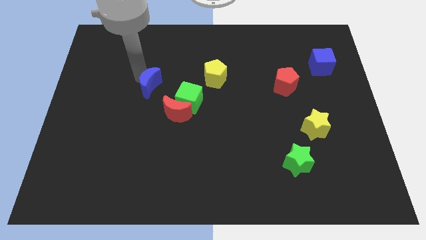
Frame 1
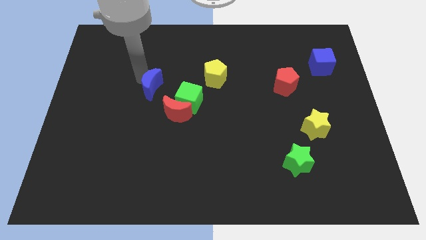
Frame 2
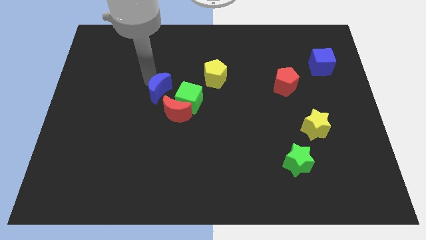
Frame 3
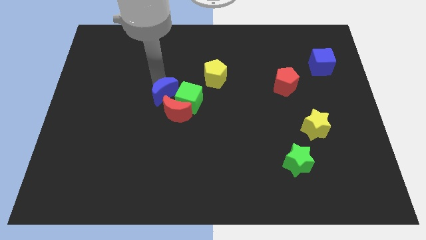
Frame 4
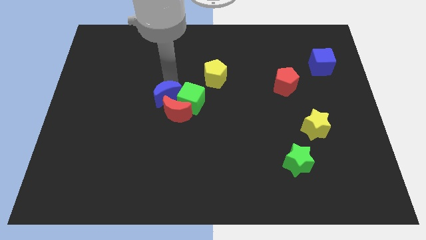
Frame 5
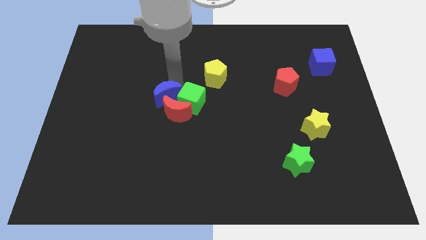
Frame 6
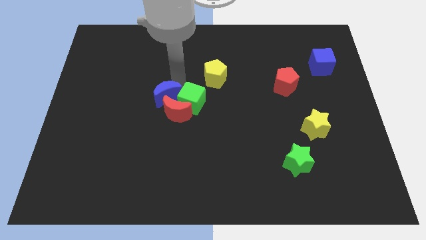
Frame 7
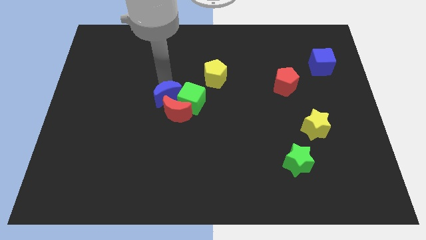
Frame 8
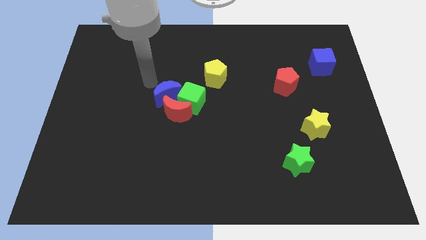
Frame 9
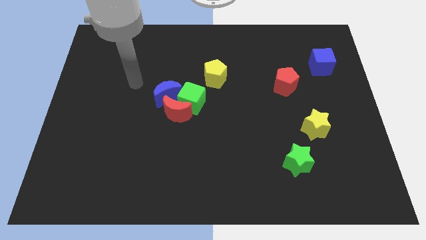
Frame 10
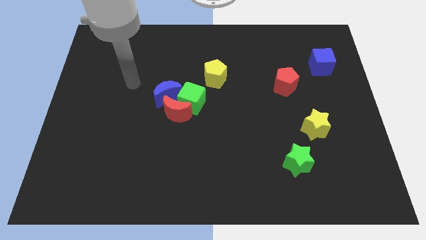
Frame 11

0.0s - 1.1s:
push the blue crescent into the green cube

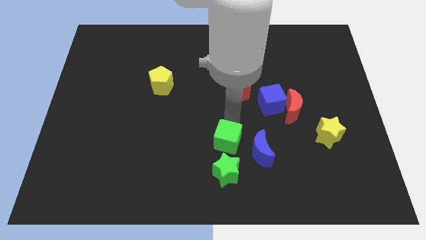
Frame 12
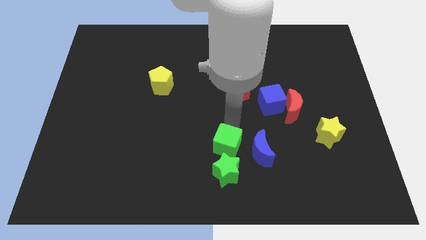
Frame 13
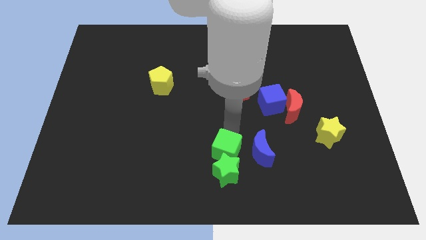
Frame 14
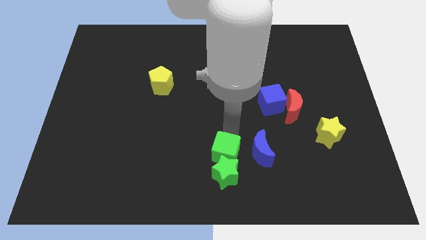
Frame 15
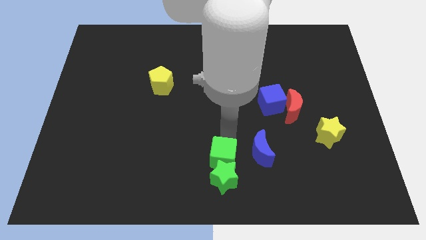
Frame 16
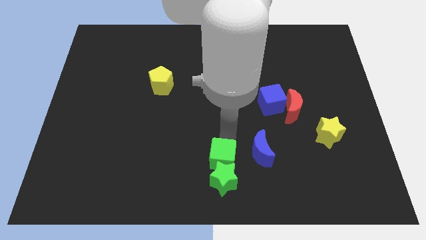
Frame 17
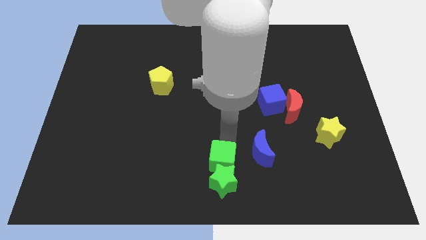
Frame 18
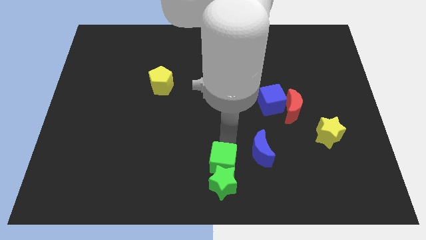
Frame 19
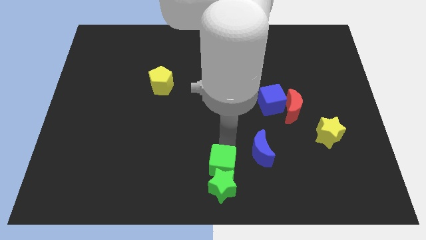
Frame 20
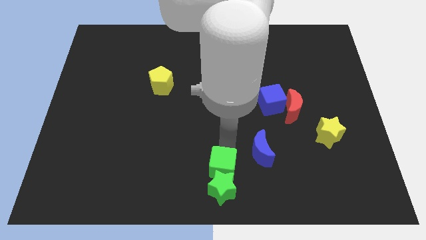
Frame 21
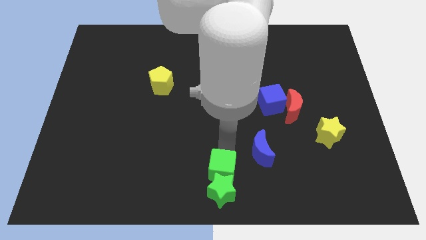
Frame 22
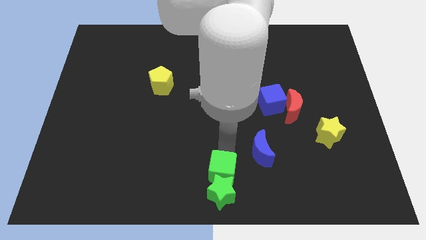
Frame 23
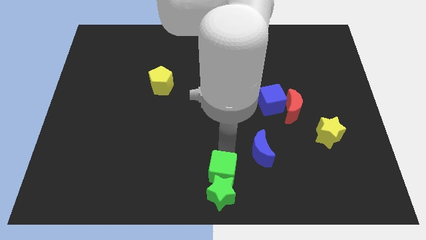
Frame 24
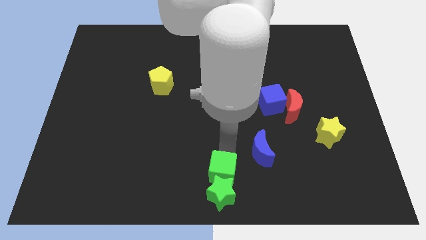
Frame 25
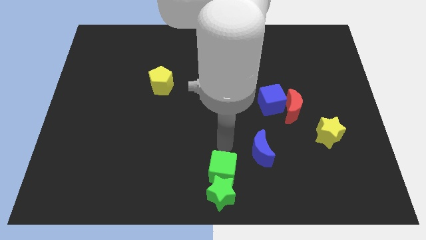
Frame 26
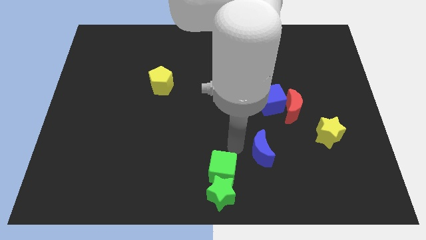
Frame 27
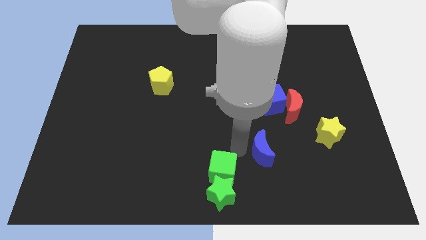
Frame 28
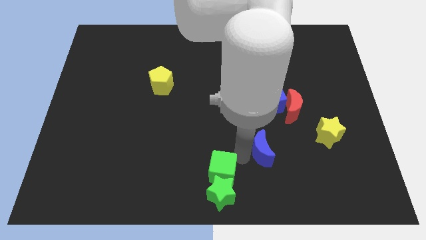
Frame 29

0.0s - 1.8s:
push the green blocks to the bottom center of the board

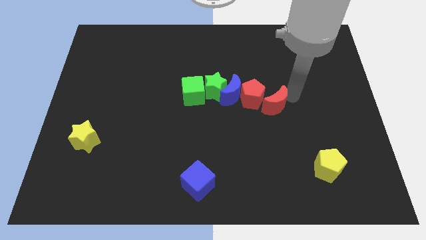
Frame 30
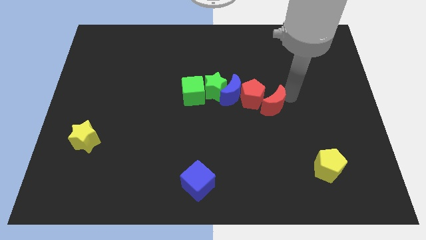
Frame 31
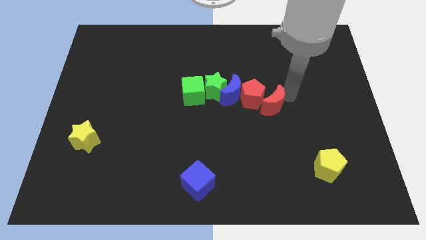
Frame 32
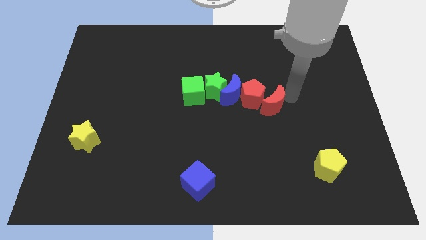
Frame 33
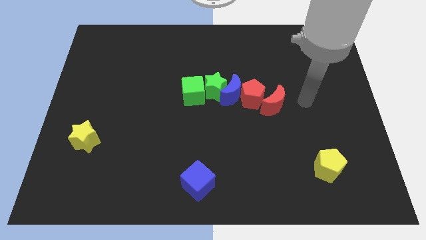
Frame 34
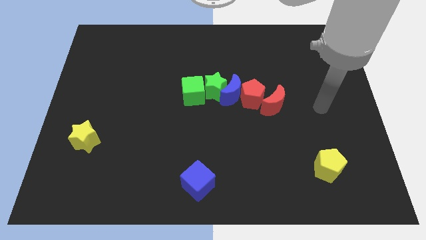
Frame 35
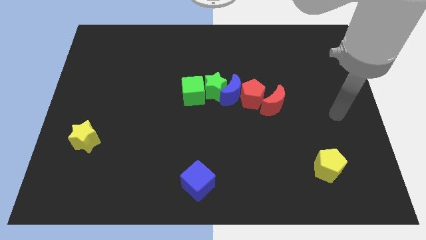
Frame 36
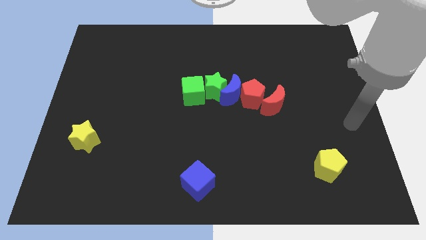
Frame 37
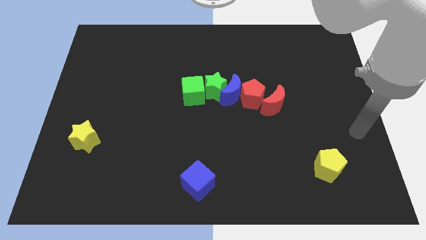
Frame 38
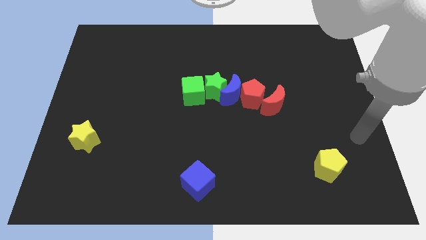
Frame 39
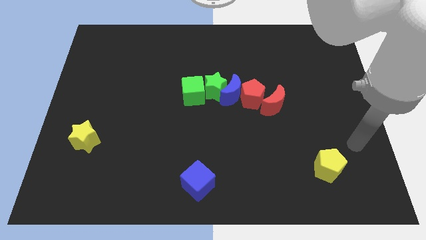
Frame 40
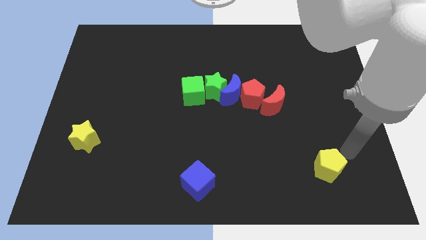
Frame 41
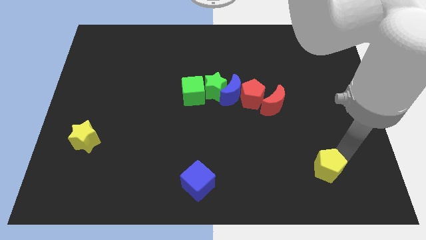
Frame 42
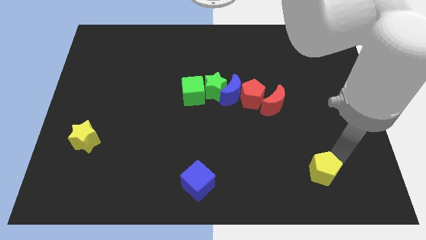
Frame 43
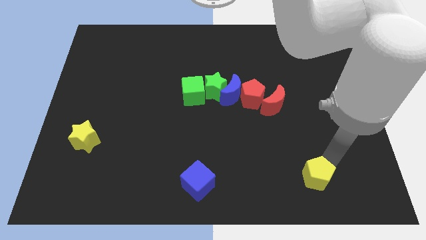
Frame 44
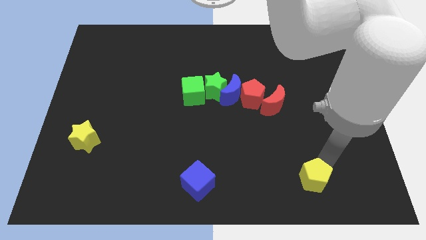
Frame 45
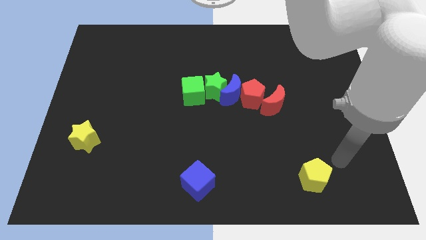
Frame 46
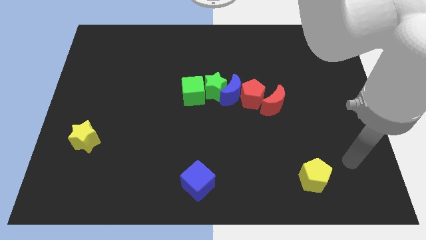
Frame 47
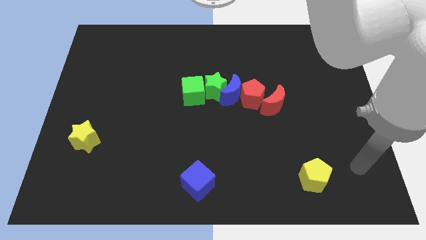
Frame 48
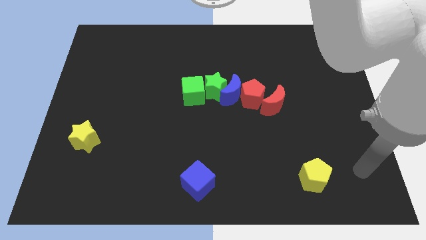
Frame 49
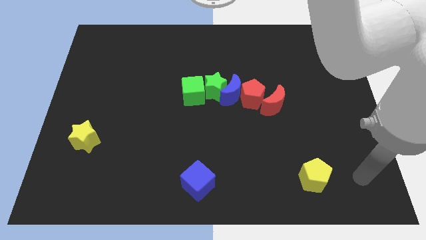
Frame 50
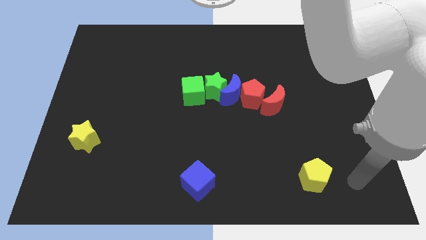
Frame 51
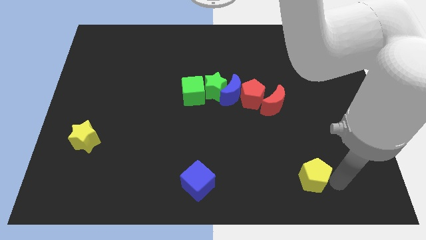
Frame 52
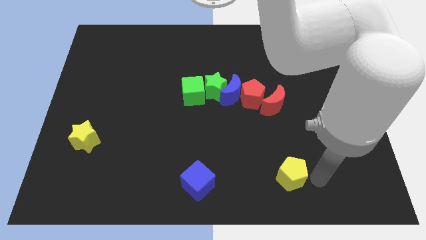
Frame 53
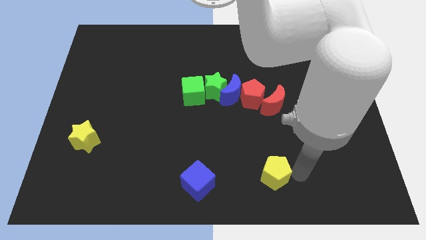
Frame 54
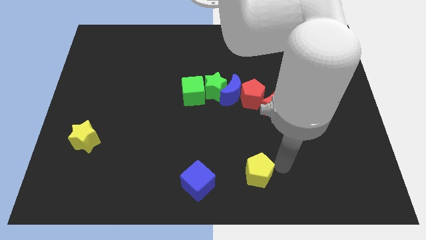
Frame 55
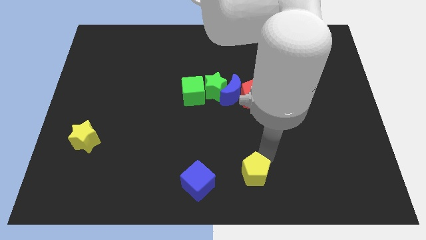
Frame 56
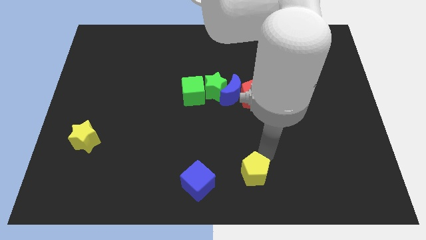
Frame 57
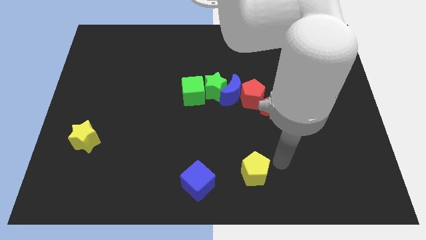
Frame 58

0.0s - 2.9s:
place the yellow pentagon below the red moon

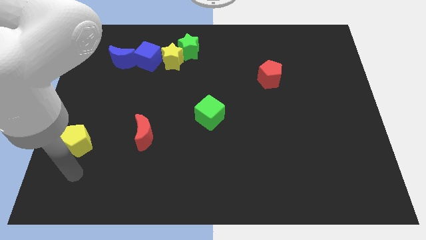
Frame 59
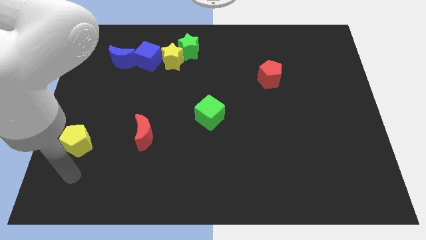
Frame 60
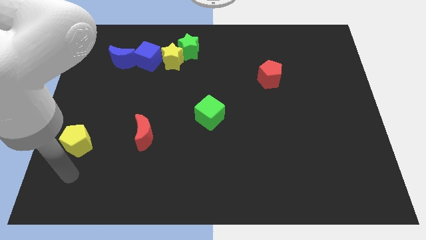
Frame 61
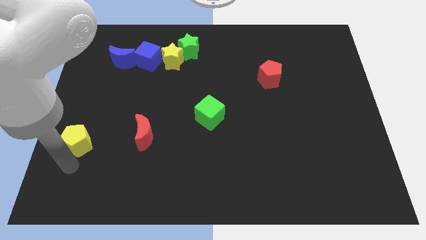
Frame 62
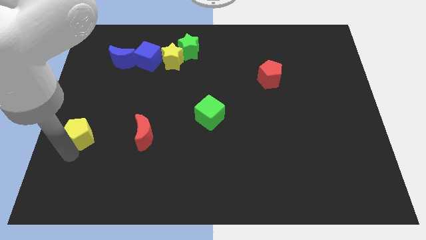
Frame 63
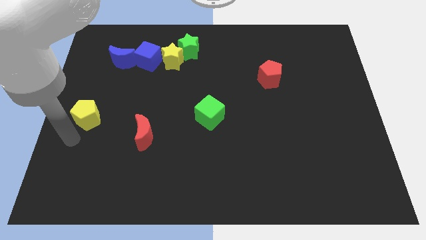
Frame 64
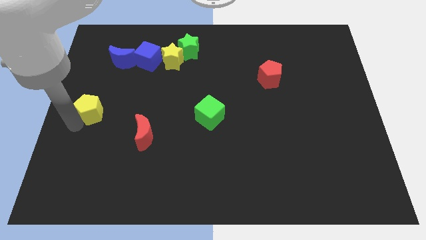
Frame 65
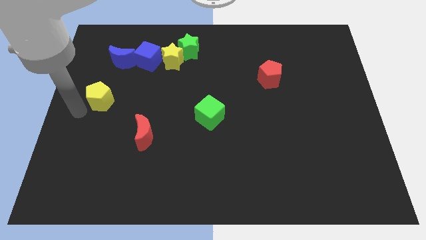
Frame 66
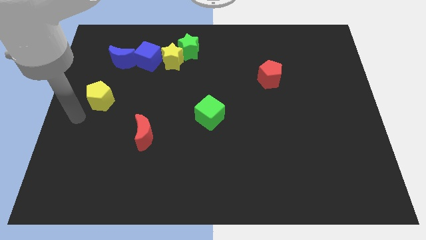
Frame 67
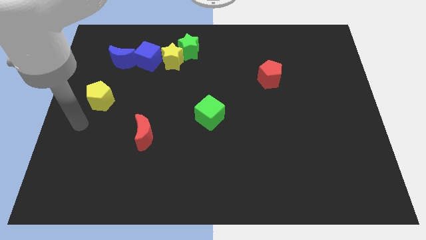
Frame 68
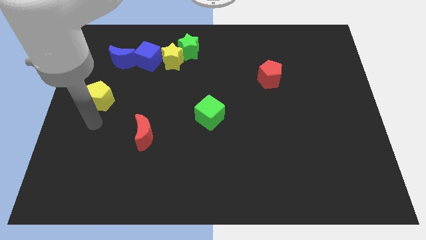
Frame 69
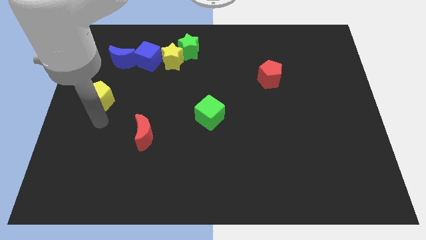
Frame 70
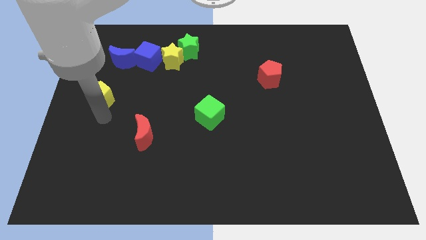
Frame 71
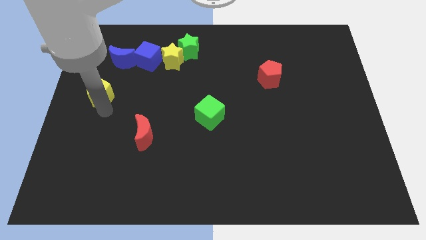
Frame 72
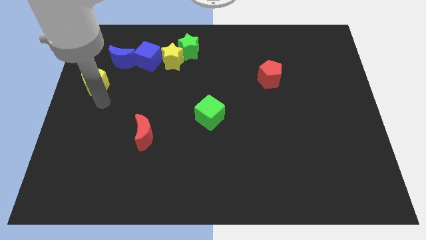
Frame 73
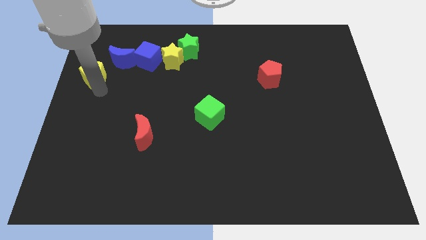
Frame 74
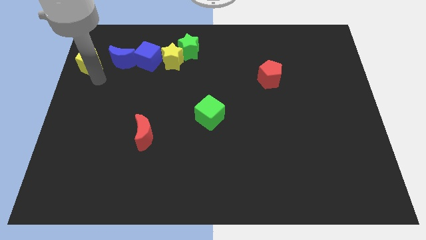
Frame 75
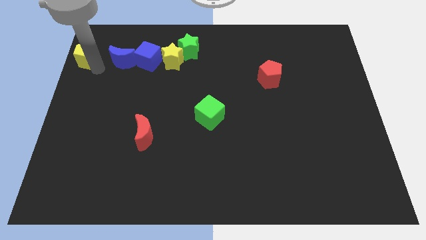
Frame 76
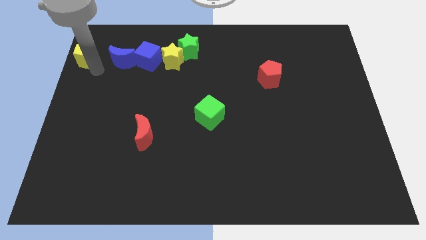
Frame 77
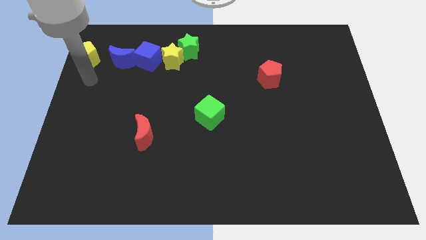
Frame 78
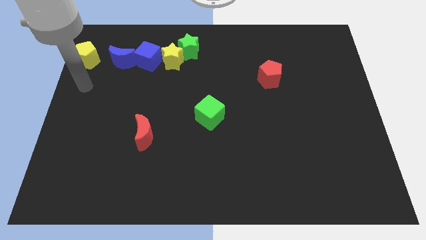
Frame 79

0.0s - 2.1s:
move the yellow pentagon to the left of the blue moon

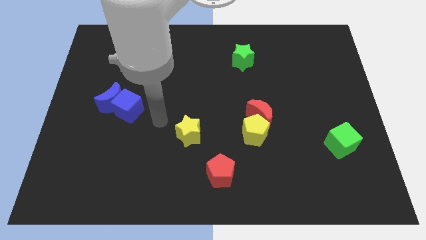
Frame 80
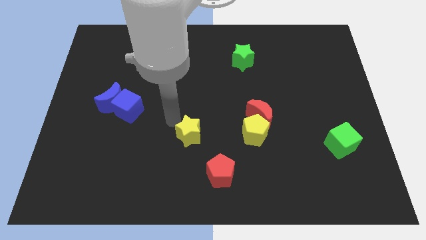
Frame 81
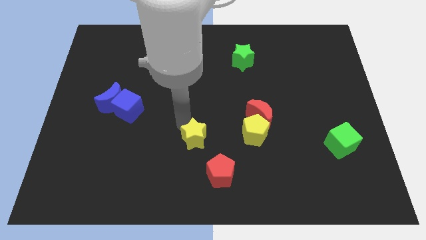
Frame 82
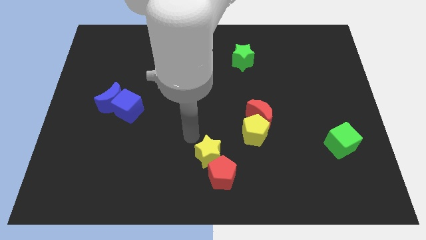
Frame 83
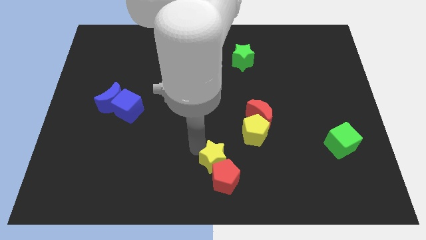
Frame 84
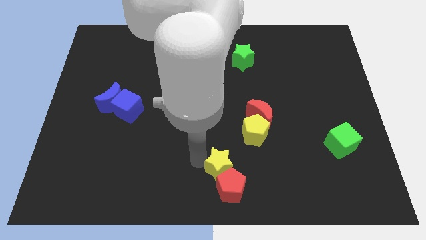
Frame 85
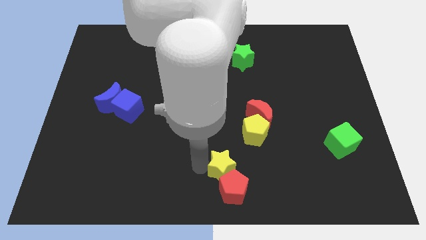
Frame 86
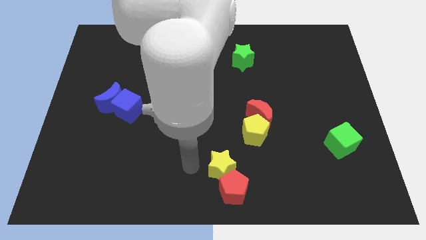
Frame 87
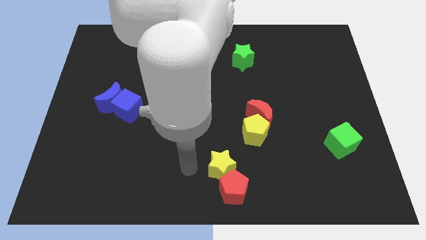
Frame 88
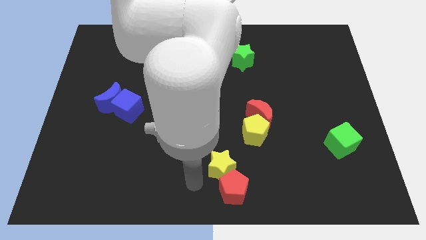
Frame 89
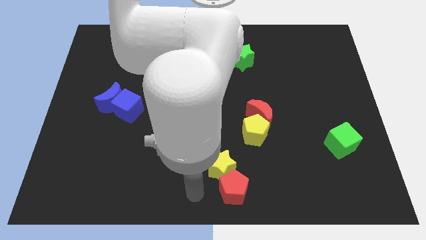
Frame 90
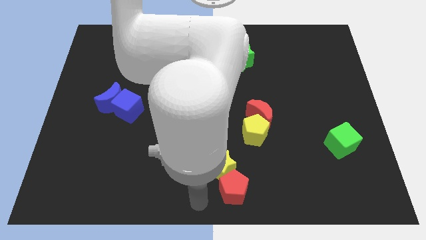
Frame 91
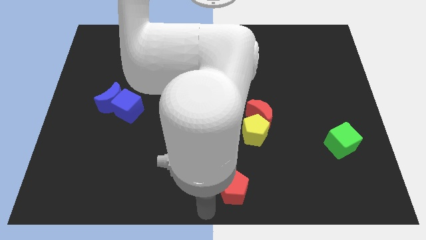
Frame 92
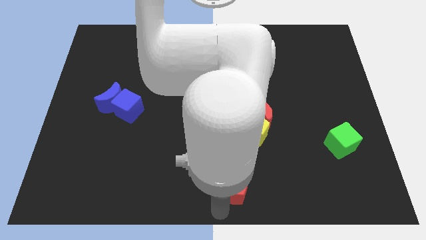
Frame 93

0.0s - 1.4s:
push the yellow star into the red pentagon
